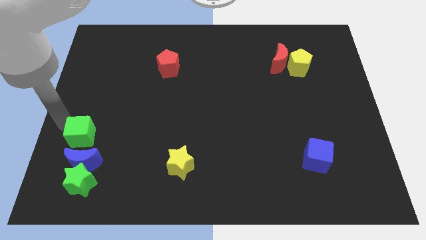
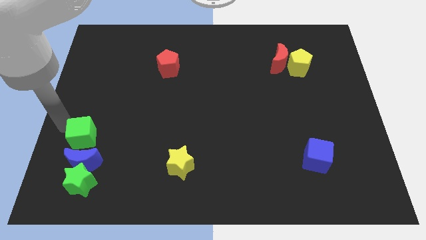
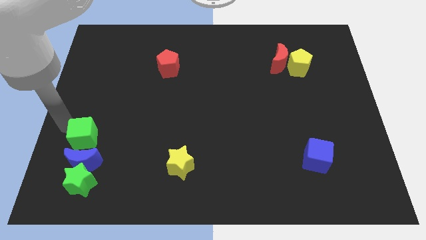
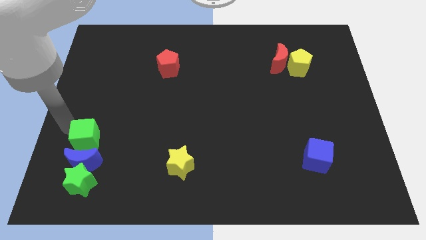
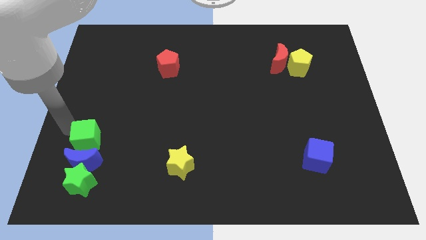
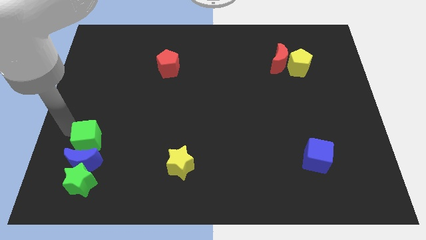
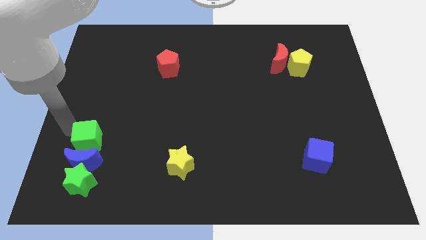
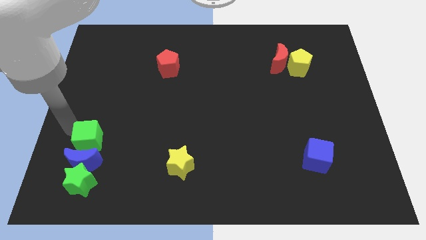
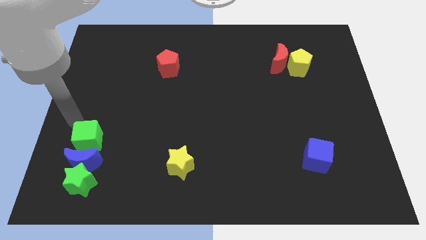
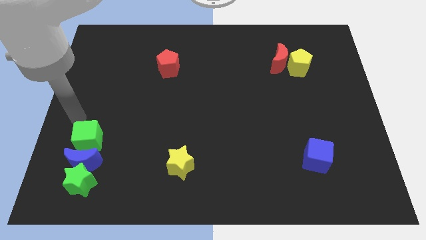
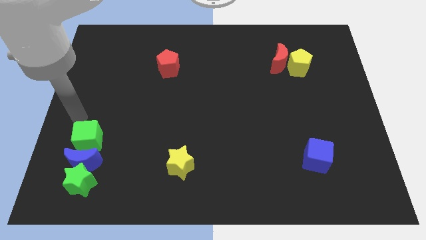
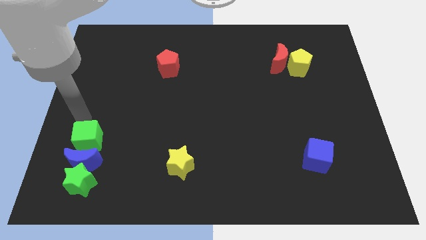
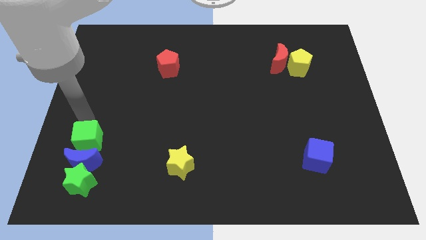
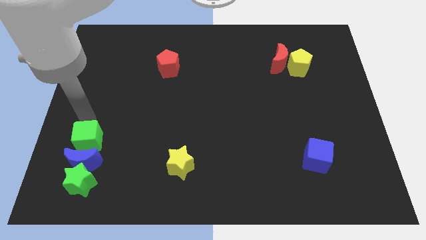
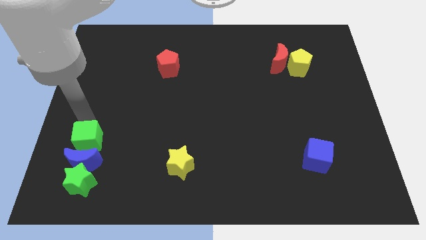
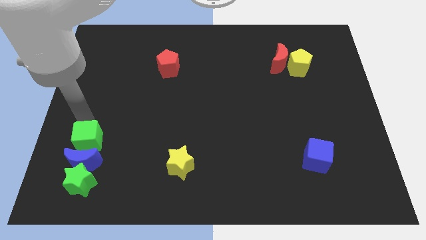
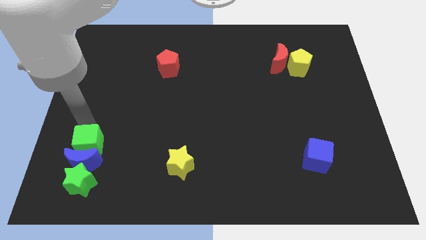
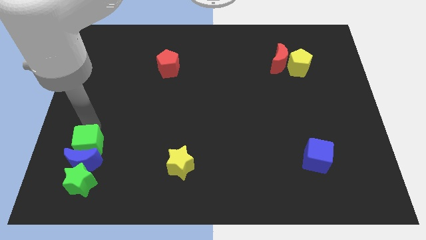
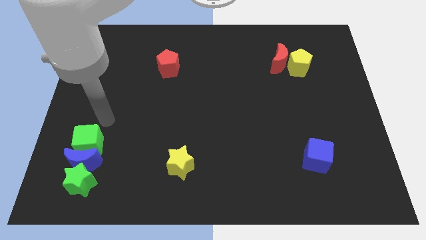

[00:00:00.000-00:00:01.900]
move the green cube into the blue moon

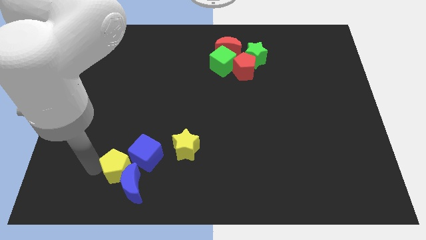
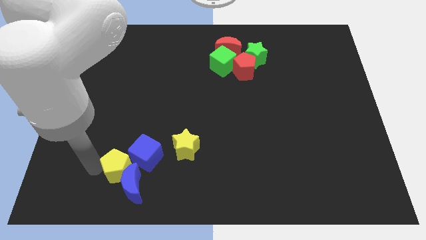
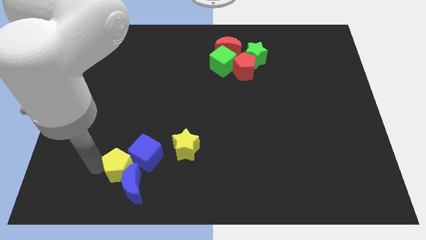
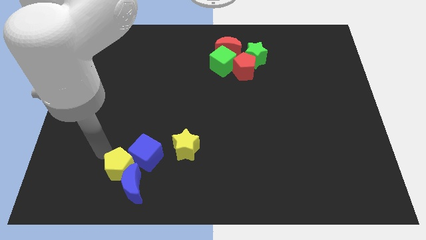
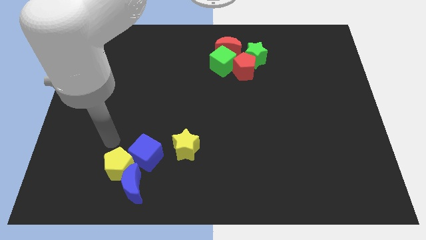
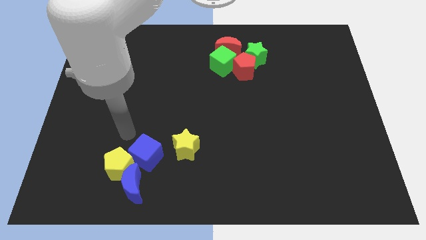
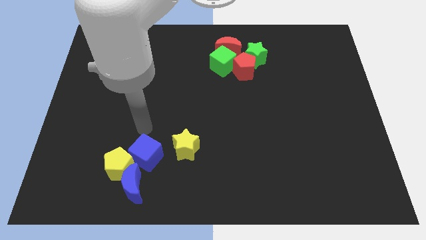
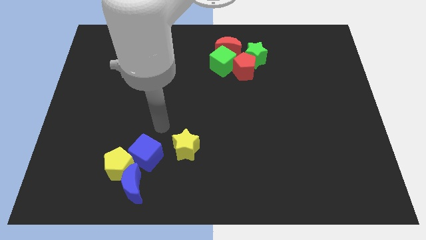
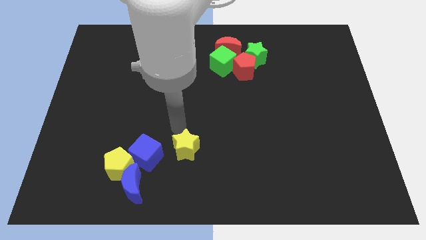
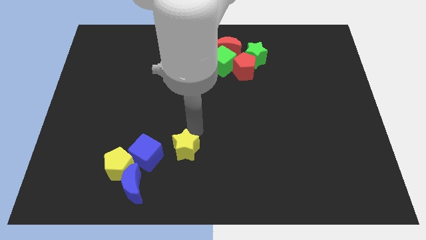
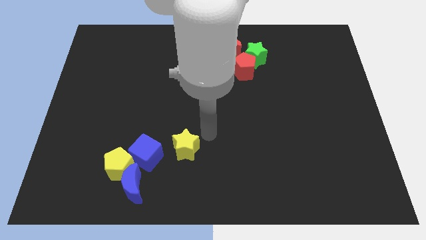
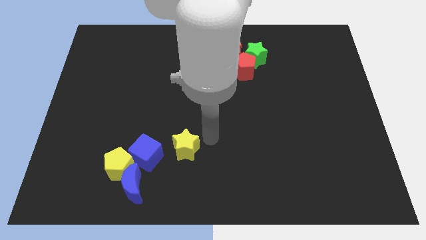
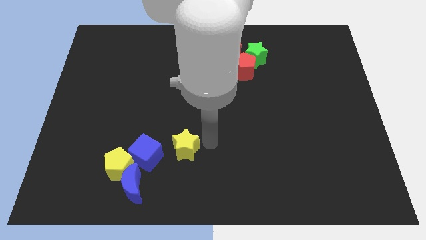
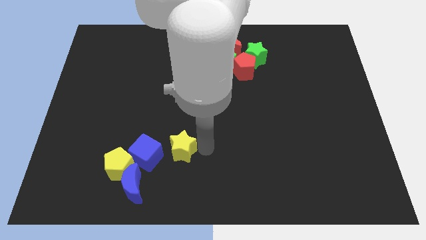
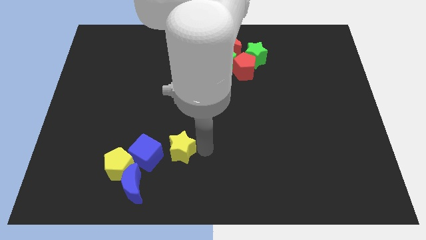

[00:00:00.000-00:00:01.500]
point your arm right to yellow star

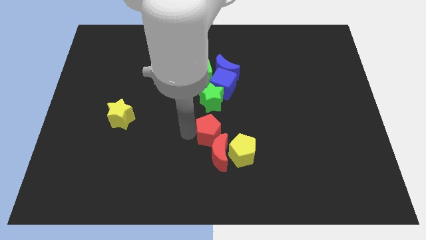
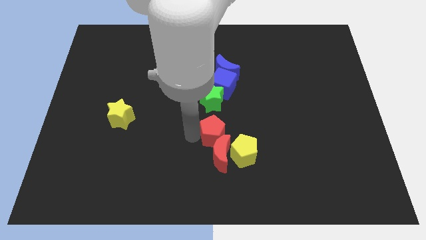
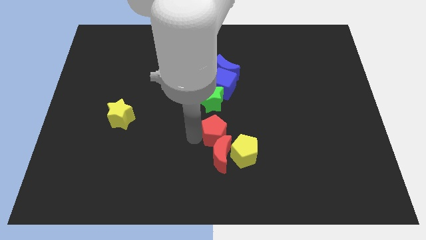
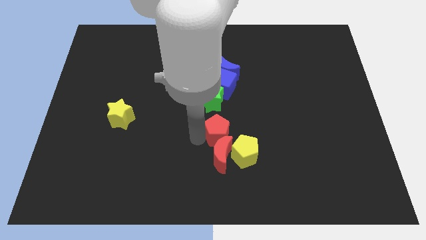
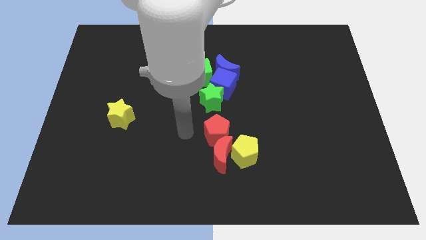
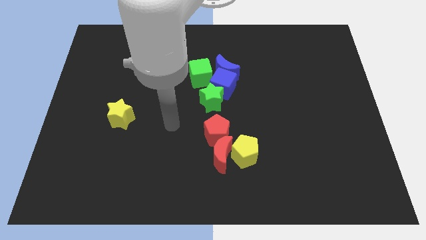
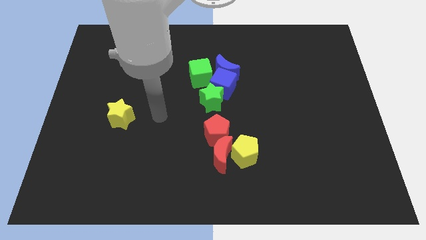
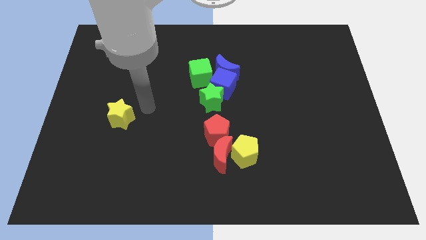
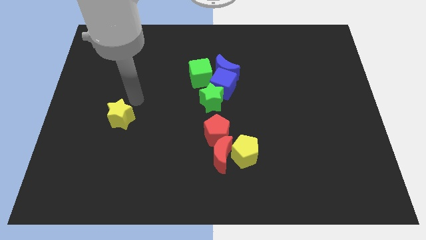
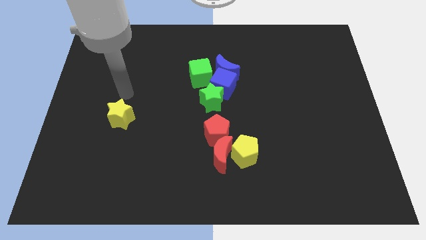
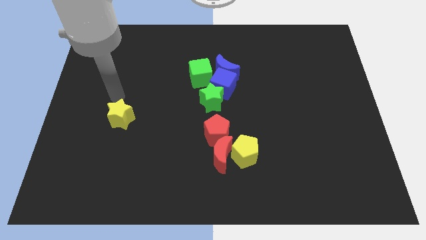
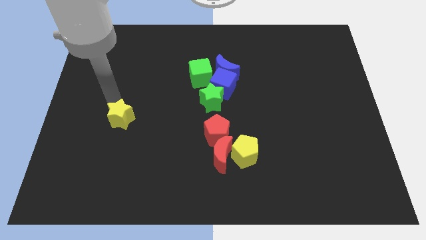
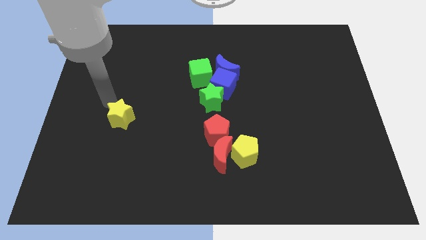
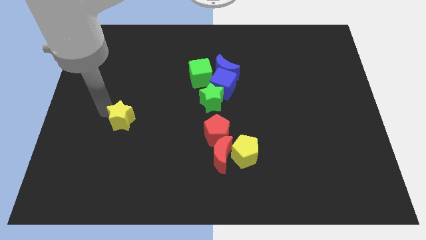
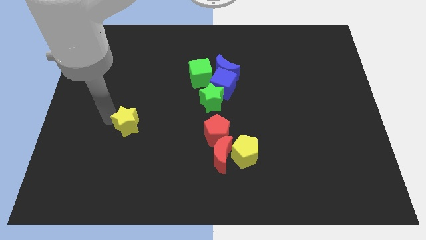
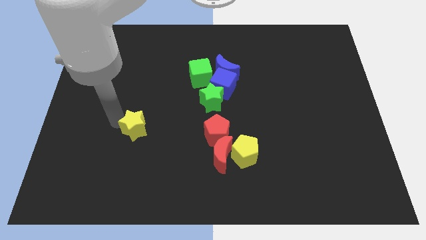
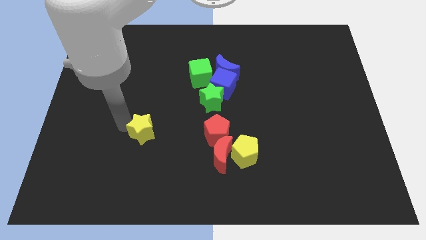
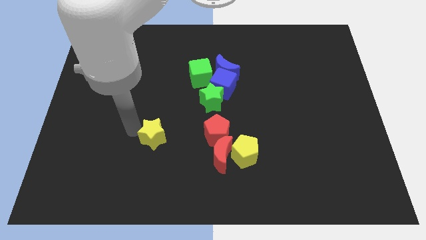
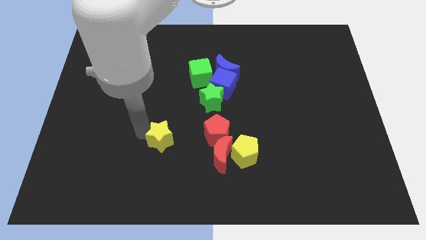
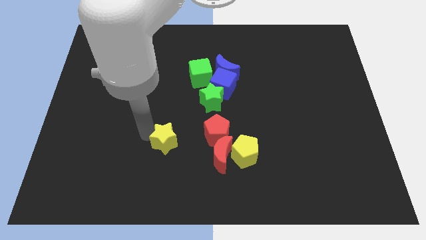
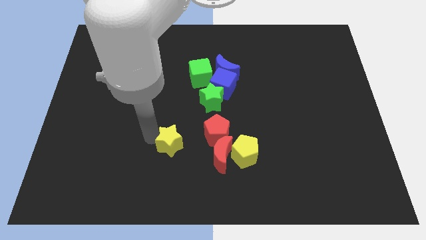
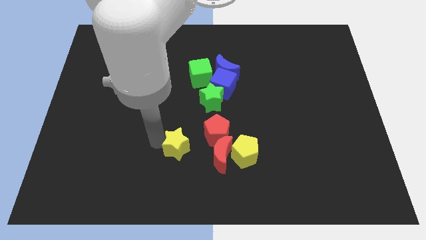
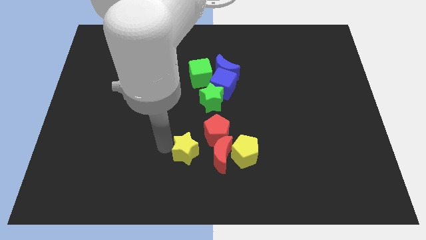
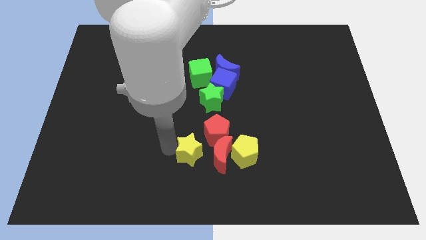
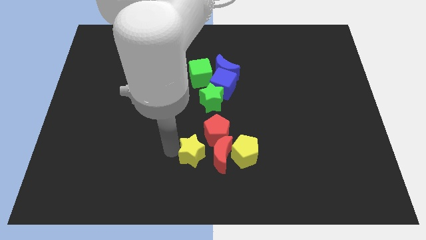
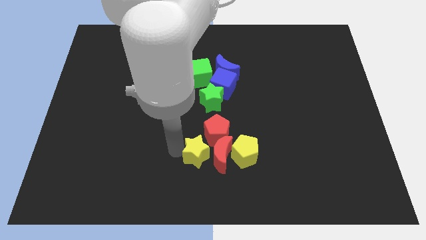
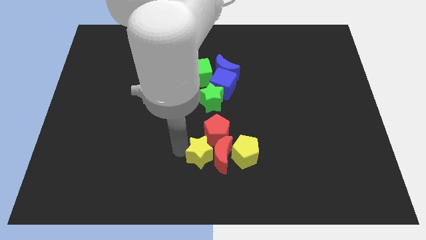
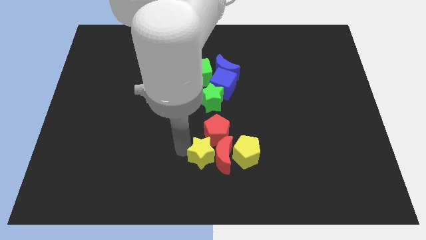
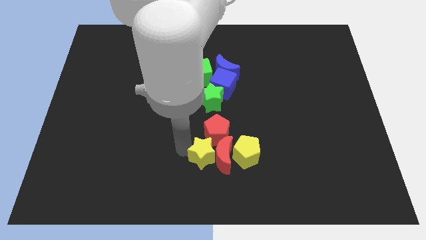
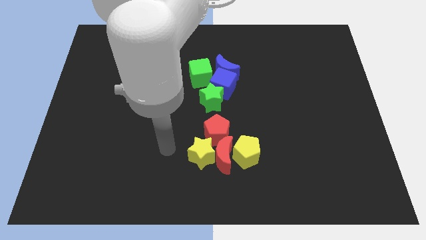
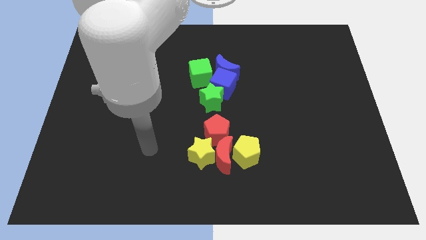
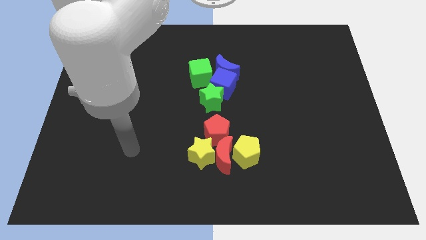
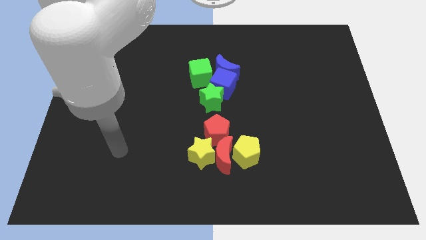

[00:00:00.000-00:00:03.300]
push yellow star into the red crescent

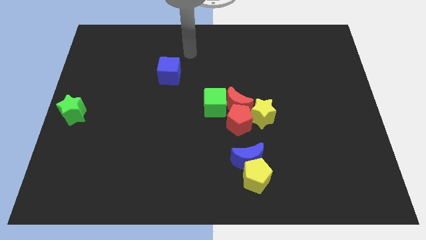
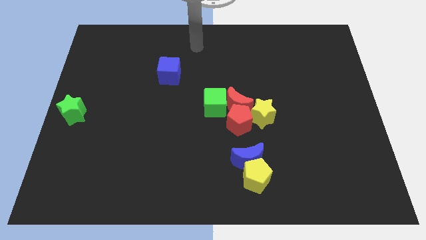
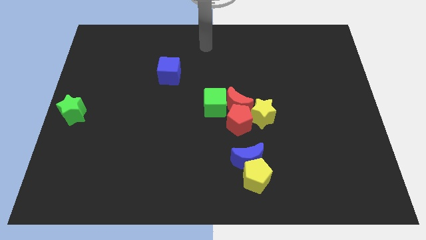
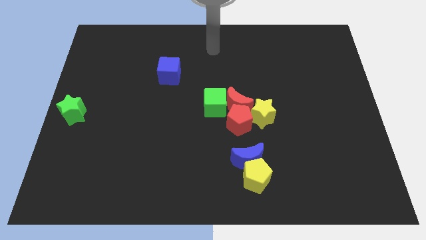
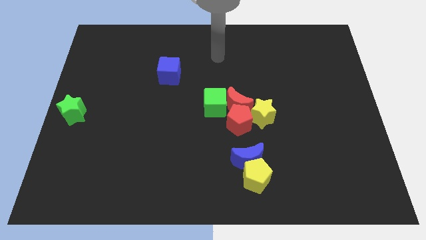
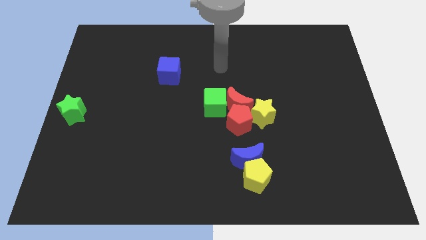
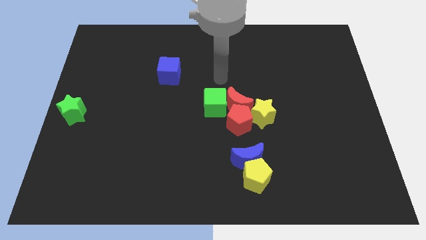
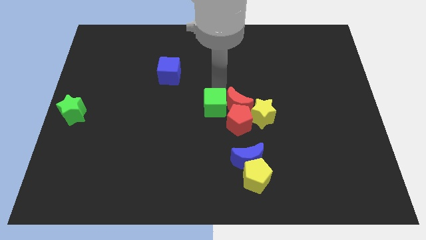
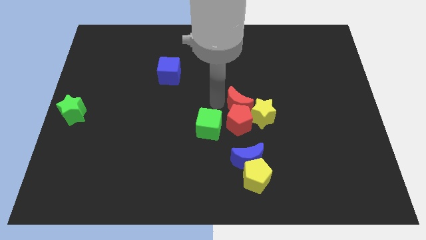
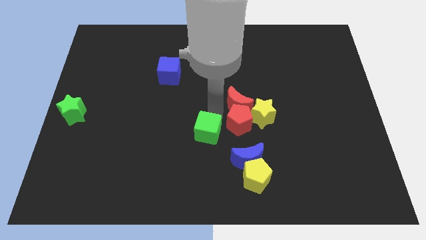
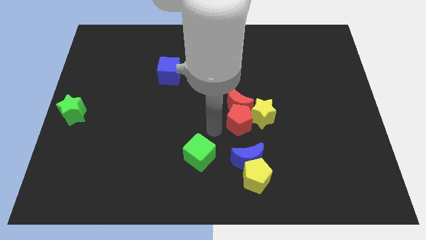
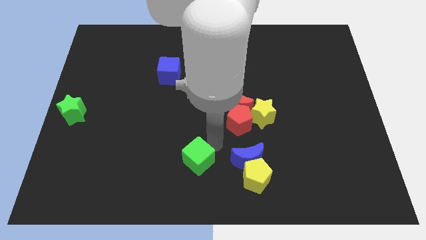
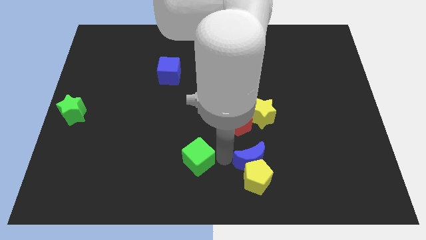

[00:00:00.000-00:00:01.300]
push the green cube to the left of the blue crescent

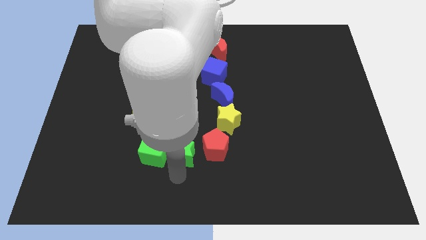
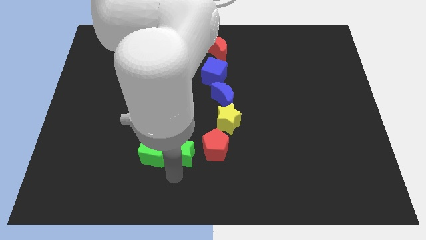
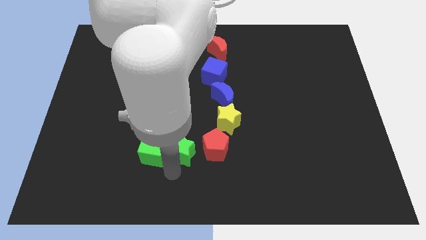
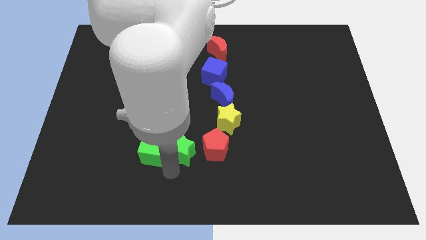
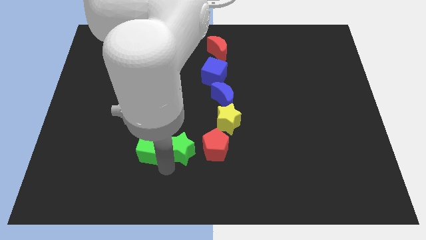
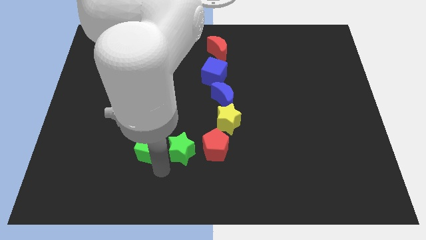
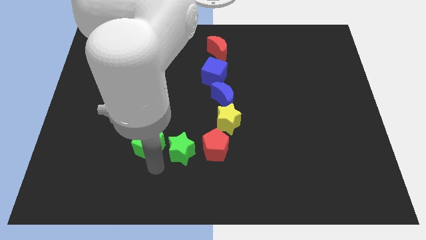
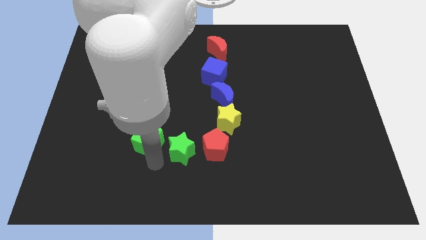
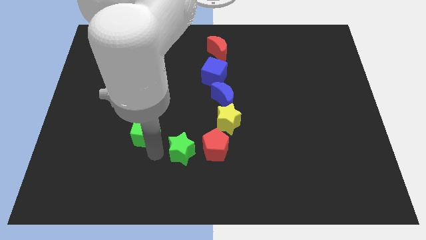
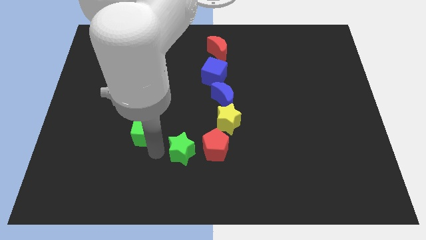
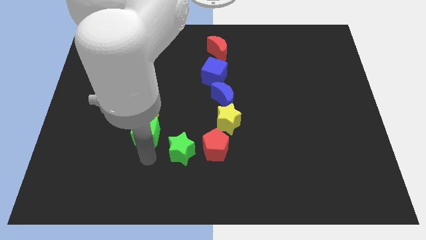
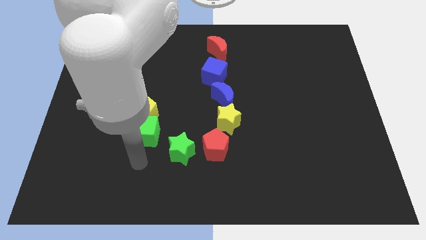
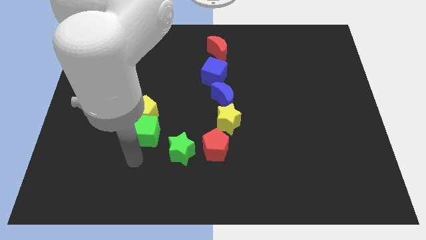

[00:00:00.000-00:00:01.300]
separate green blocks
